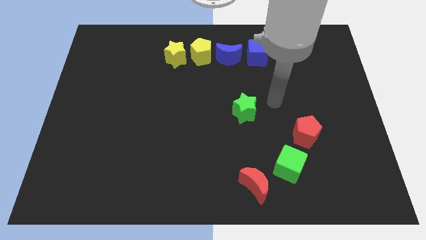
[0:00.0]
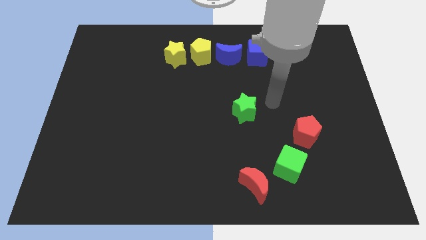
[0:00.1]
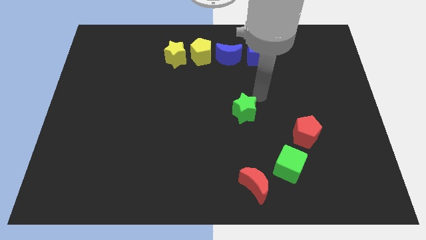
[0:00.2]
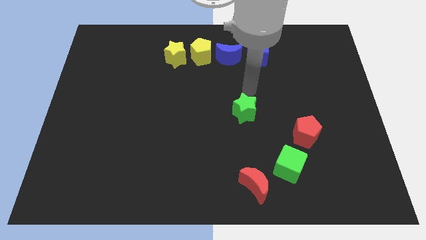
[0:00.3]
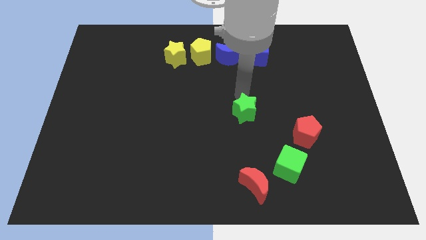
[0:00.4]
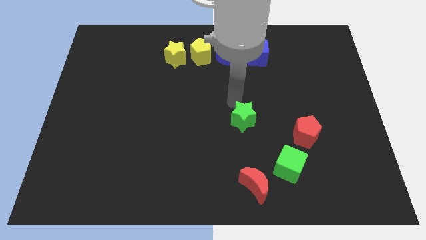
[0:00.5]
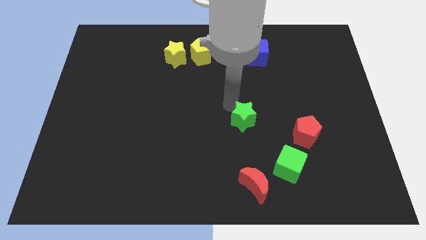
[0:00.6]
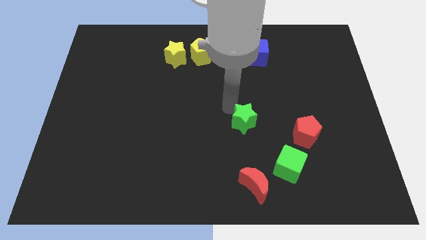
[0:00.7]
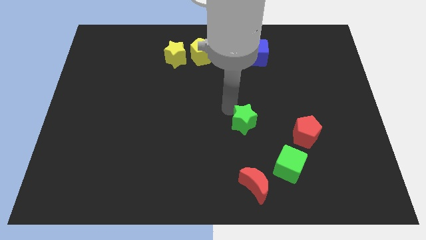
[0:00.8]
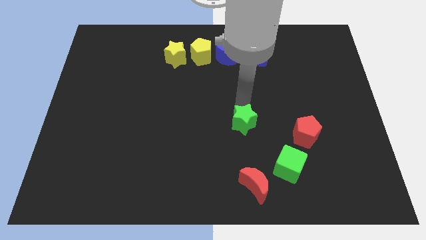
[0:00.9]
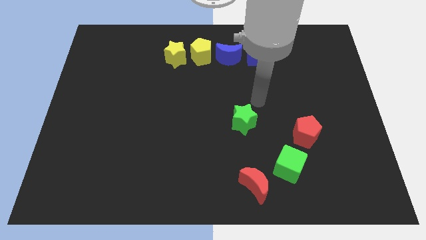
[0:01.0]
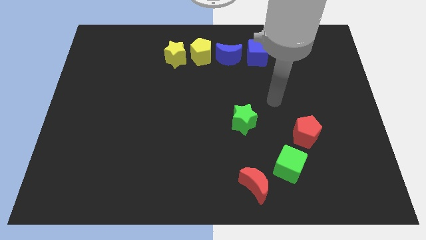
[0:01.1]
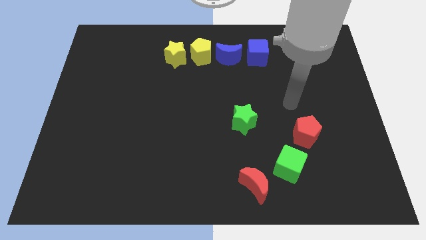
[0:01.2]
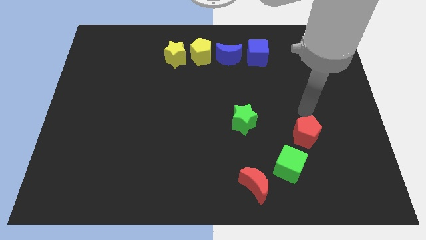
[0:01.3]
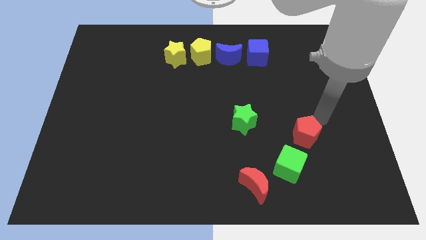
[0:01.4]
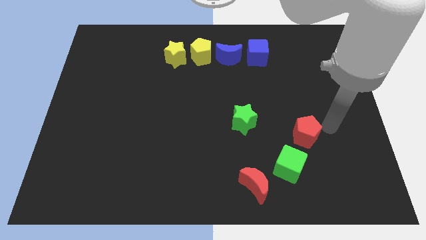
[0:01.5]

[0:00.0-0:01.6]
slide the green star slightly down

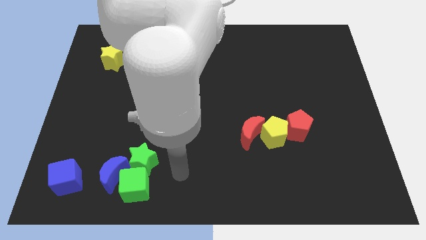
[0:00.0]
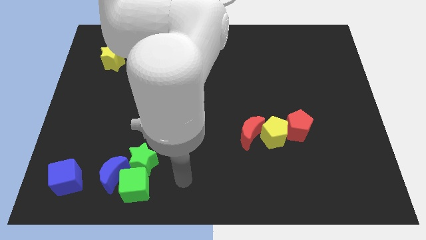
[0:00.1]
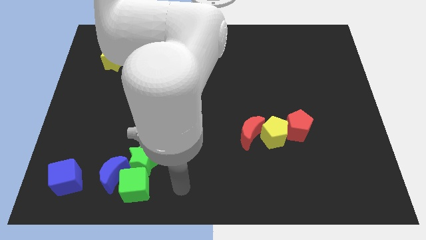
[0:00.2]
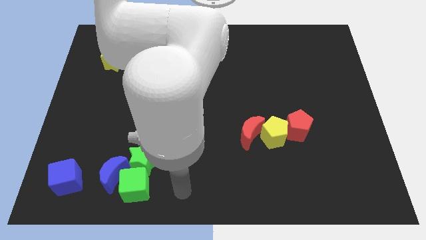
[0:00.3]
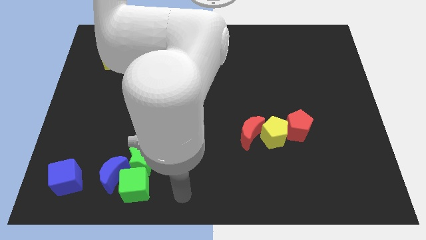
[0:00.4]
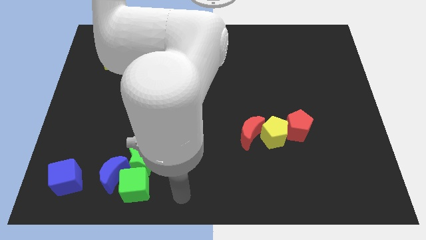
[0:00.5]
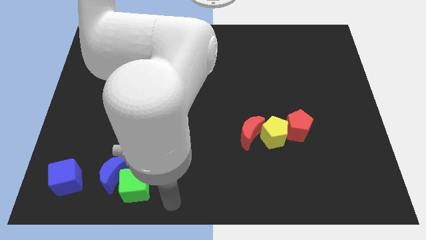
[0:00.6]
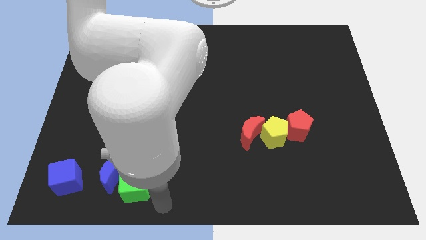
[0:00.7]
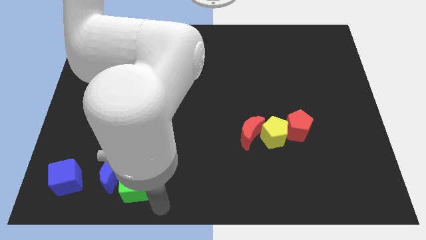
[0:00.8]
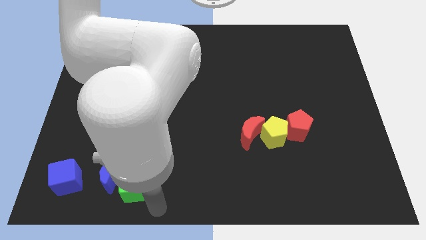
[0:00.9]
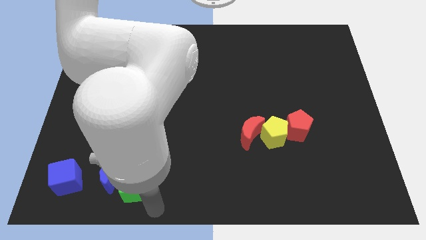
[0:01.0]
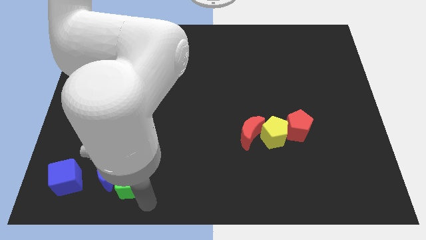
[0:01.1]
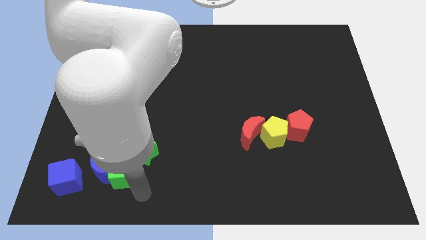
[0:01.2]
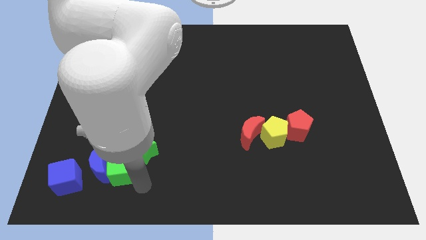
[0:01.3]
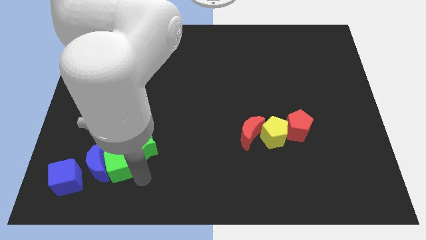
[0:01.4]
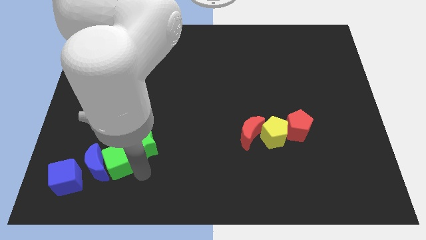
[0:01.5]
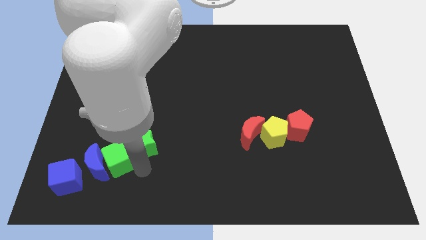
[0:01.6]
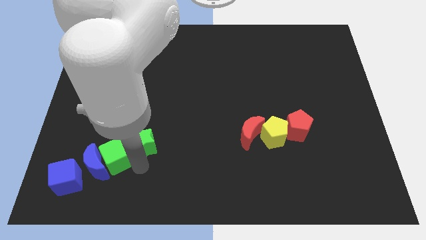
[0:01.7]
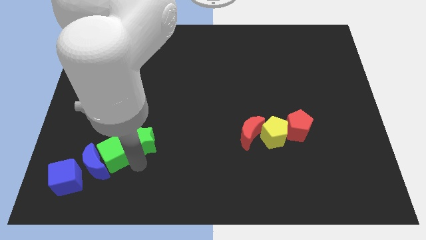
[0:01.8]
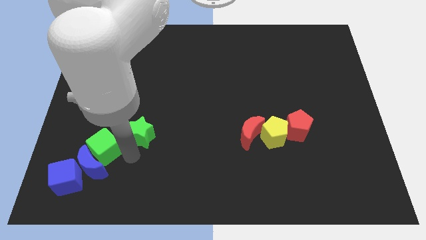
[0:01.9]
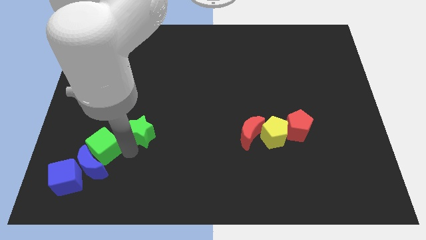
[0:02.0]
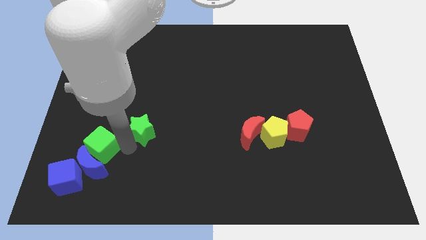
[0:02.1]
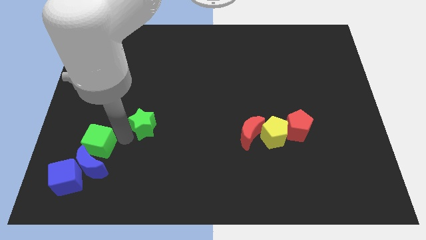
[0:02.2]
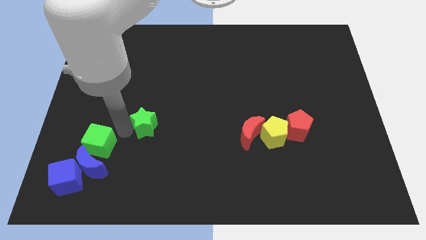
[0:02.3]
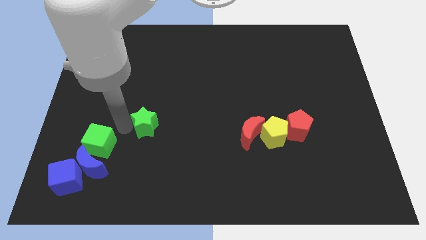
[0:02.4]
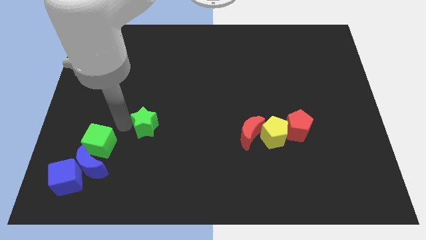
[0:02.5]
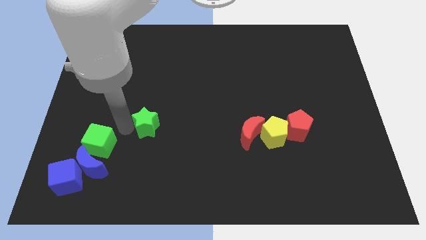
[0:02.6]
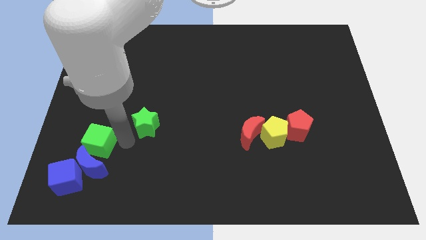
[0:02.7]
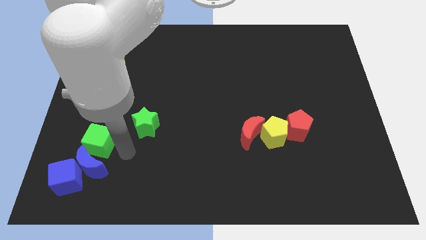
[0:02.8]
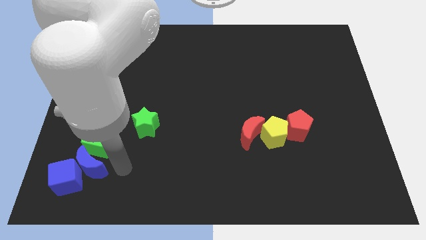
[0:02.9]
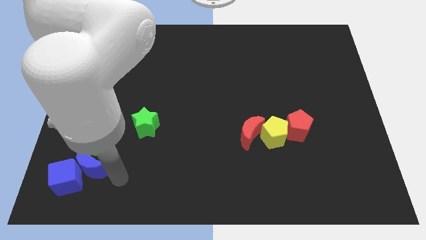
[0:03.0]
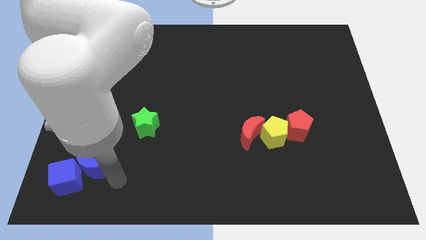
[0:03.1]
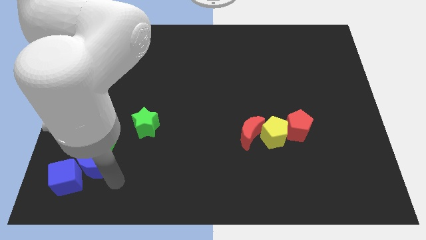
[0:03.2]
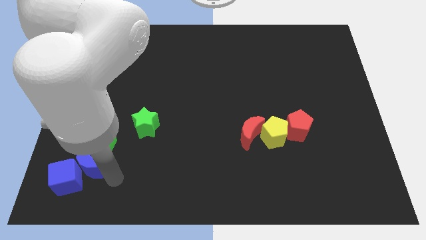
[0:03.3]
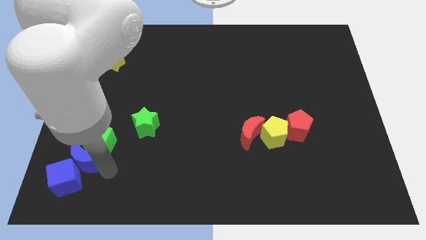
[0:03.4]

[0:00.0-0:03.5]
adjust the green cube on the top right to the blue moon

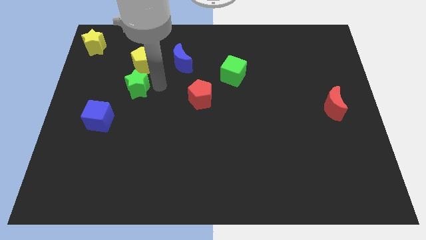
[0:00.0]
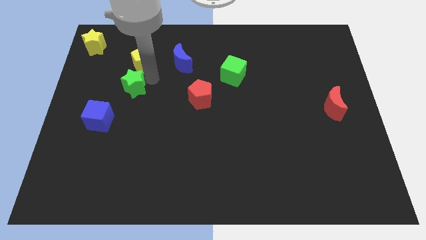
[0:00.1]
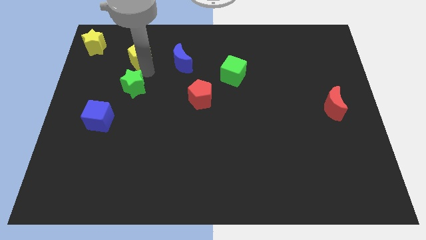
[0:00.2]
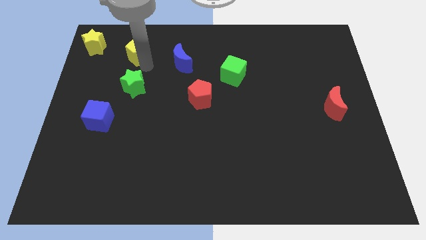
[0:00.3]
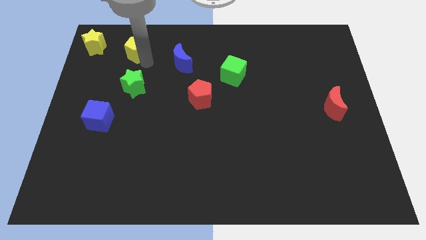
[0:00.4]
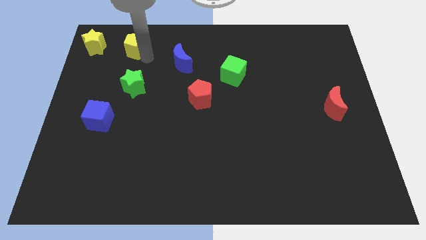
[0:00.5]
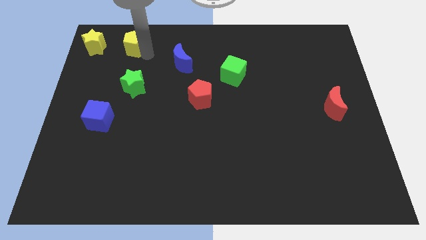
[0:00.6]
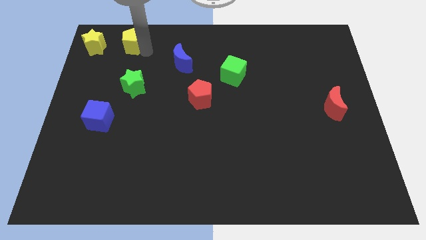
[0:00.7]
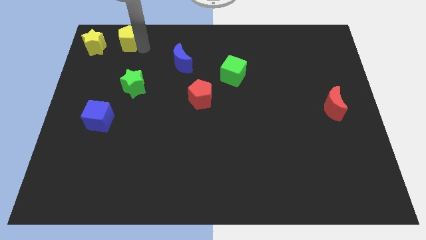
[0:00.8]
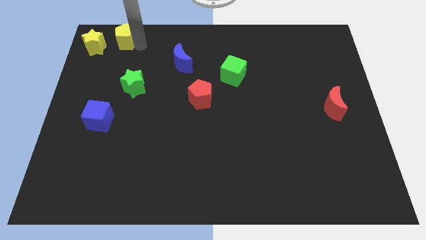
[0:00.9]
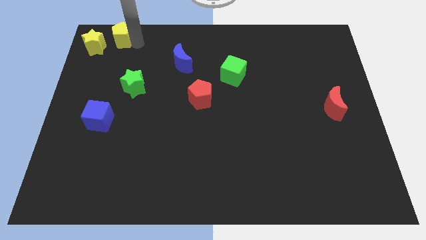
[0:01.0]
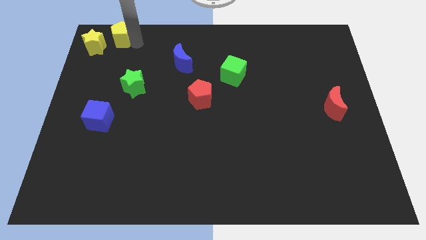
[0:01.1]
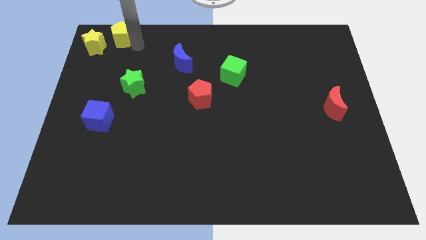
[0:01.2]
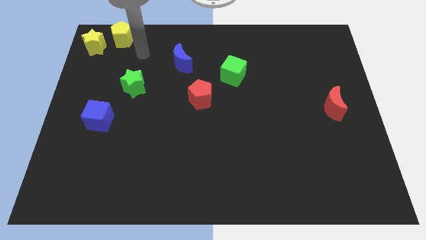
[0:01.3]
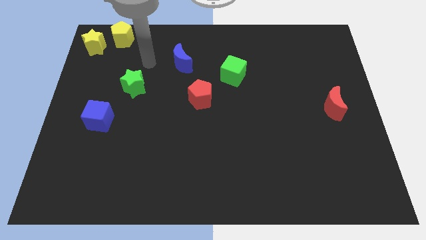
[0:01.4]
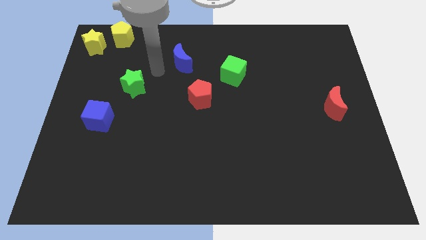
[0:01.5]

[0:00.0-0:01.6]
push the yellow pentagon to the top right of the board

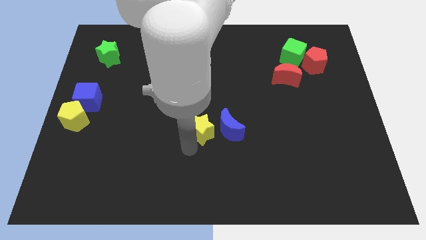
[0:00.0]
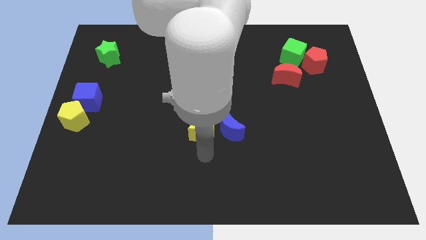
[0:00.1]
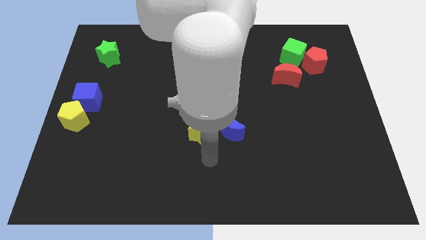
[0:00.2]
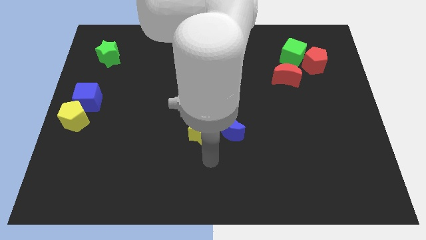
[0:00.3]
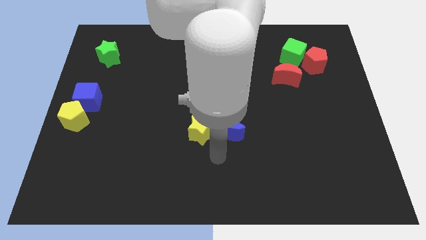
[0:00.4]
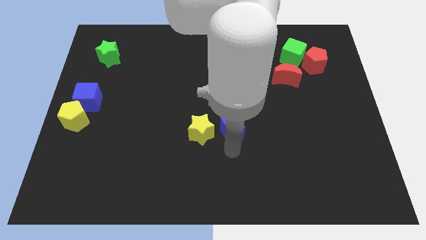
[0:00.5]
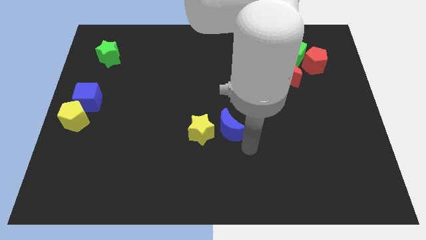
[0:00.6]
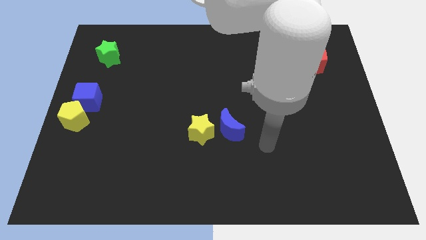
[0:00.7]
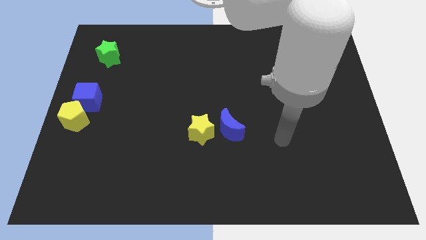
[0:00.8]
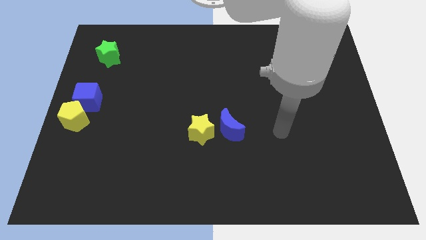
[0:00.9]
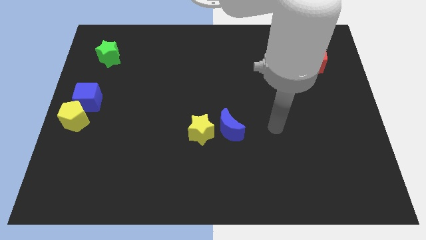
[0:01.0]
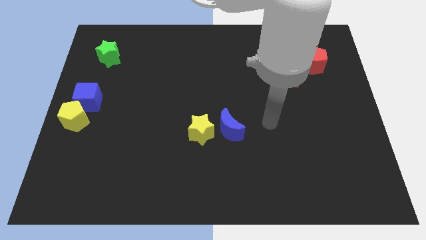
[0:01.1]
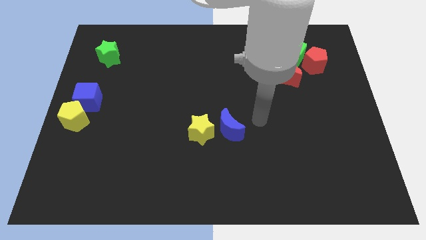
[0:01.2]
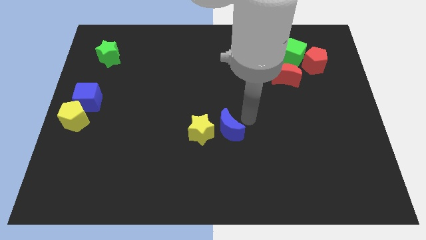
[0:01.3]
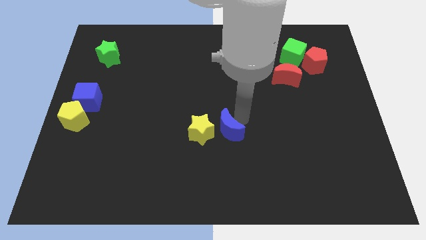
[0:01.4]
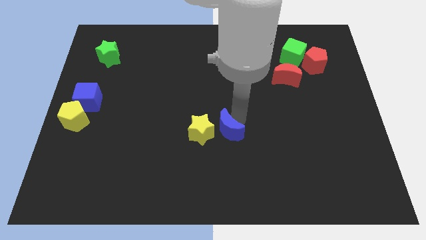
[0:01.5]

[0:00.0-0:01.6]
move the arm to the right of the blue moon

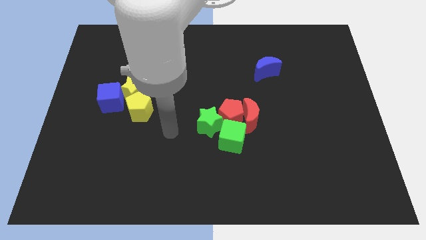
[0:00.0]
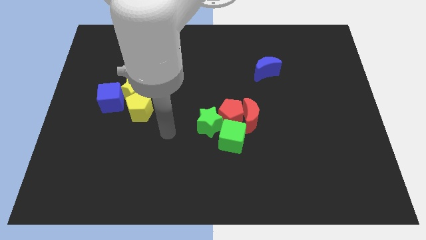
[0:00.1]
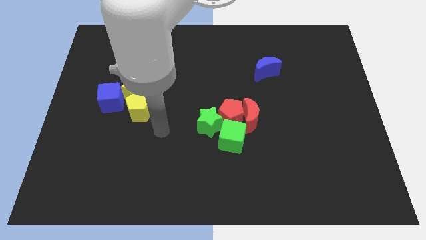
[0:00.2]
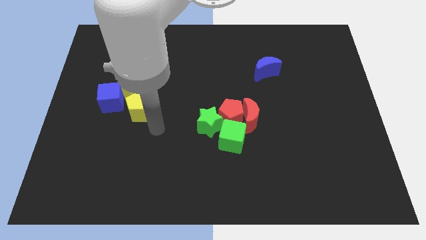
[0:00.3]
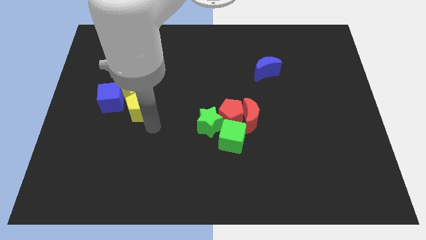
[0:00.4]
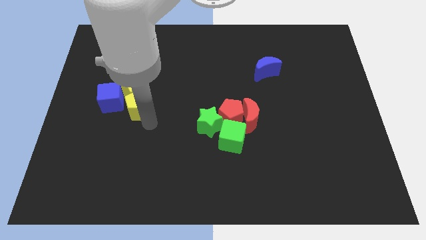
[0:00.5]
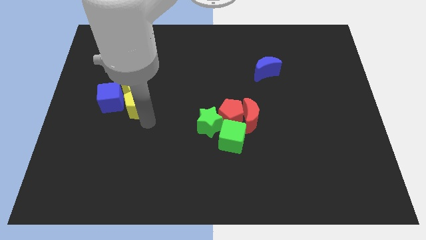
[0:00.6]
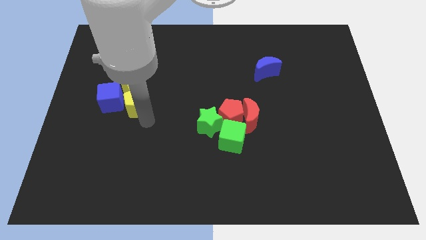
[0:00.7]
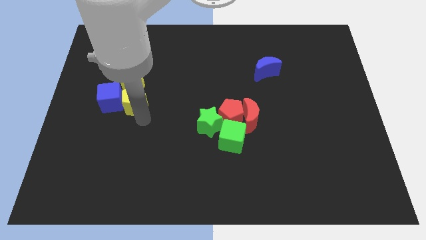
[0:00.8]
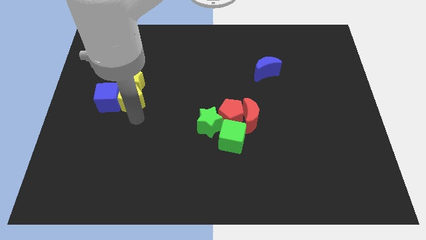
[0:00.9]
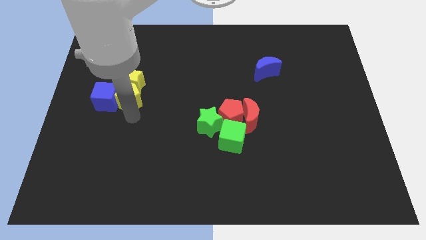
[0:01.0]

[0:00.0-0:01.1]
place yellow pentagon to the right of blue cube
